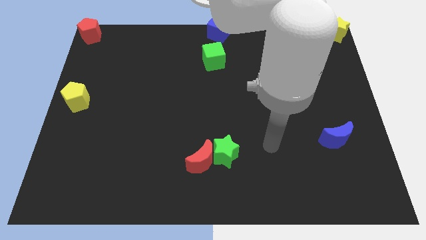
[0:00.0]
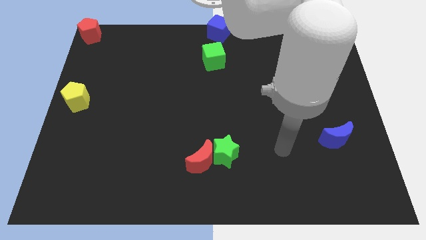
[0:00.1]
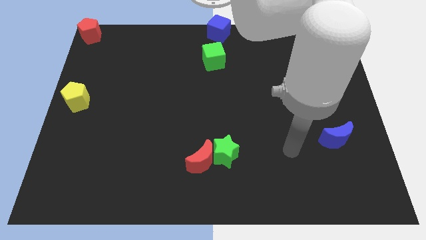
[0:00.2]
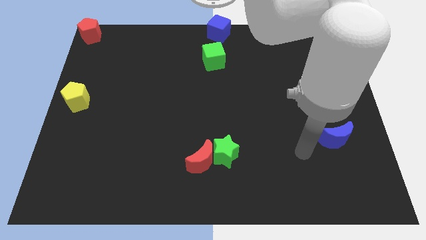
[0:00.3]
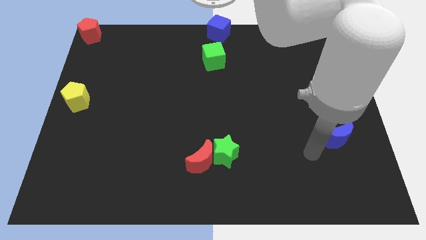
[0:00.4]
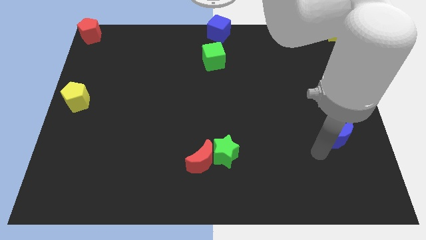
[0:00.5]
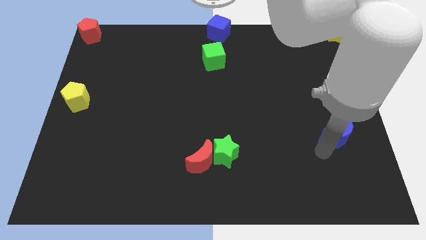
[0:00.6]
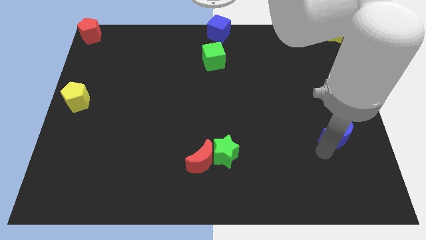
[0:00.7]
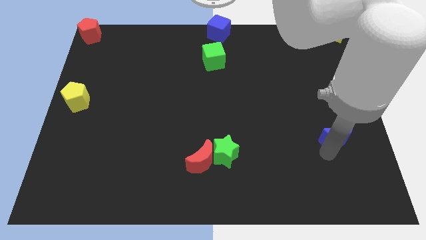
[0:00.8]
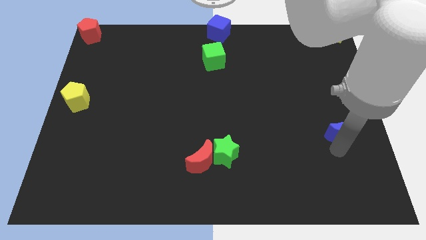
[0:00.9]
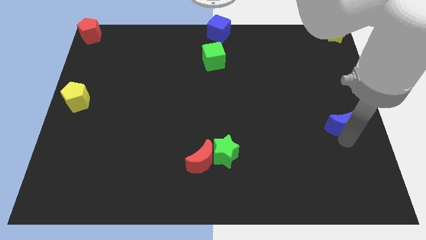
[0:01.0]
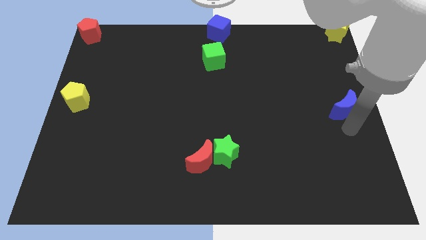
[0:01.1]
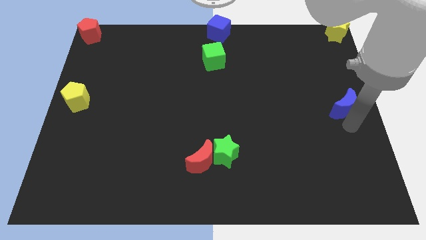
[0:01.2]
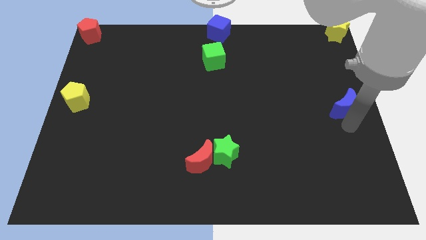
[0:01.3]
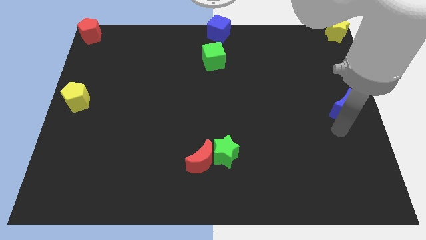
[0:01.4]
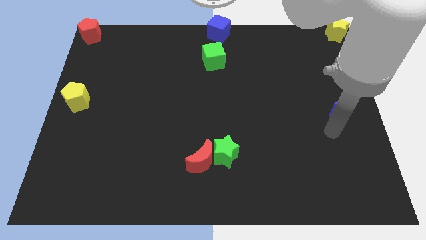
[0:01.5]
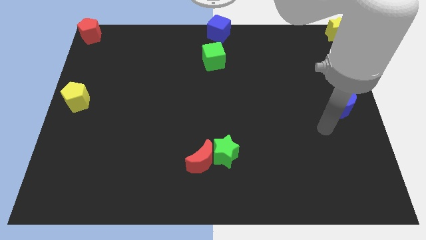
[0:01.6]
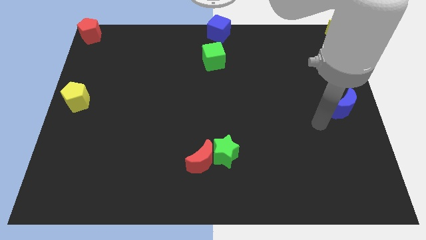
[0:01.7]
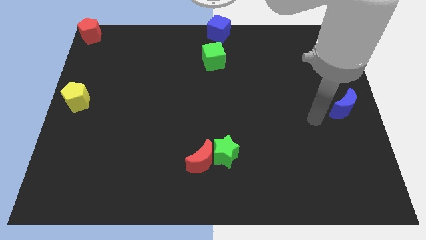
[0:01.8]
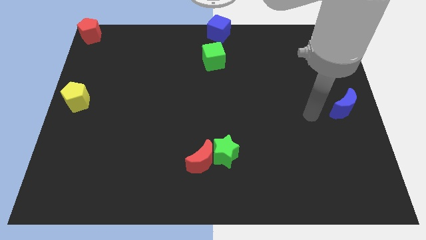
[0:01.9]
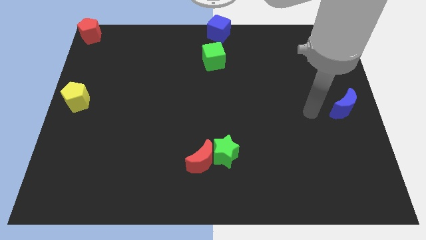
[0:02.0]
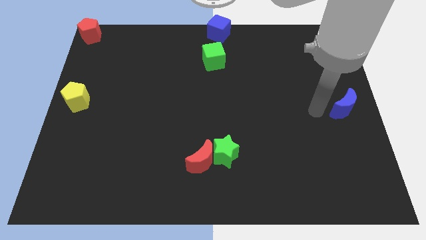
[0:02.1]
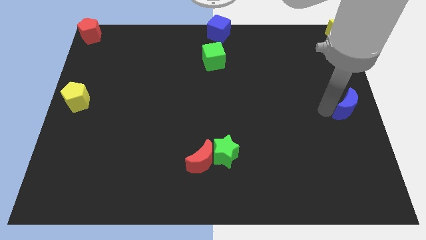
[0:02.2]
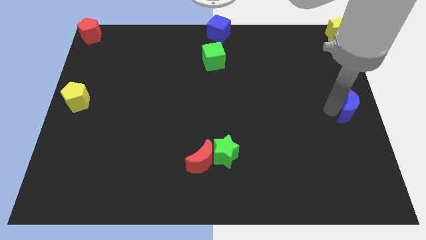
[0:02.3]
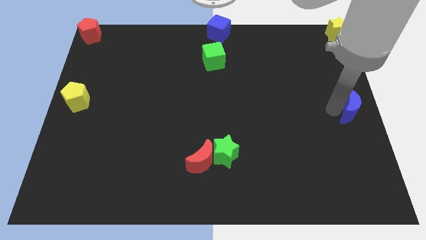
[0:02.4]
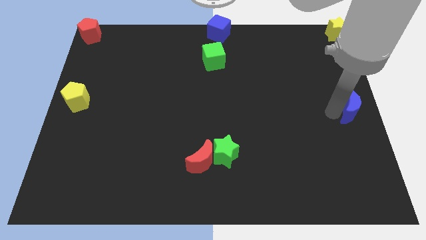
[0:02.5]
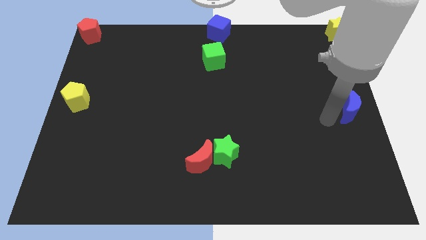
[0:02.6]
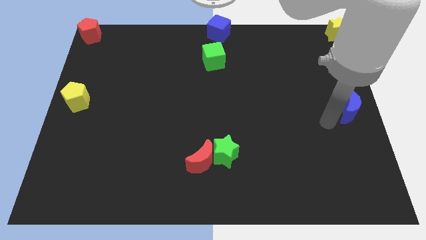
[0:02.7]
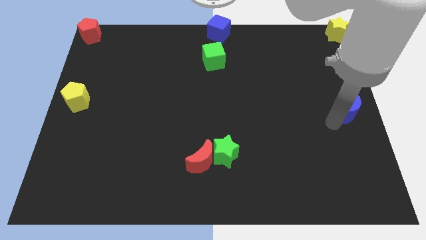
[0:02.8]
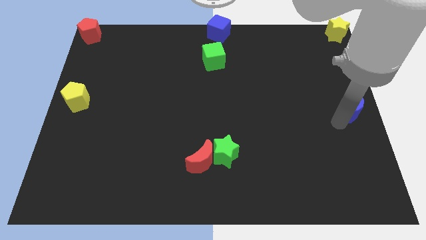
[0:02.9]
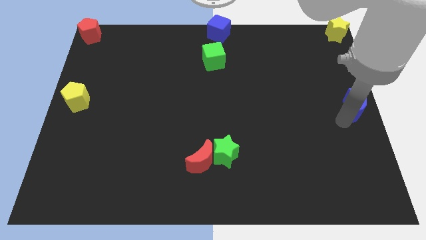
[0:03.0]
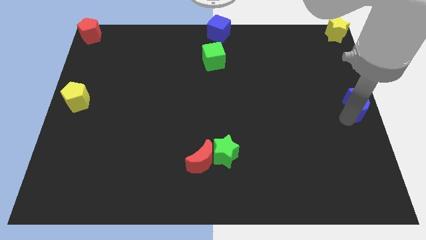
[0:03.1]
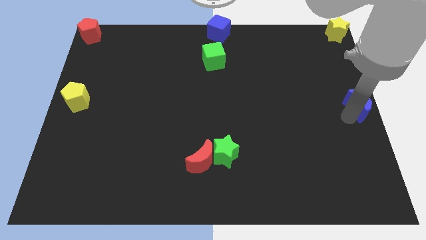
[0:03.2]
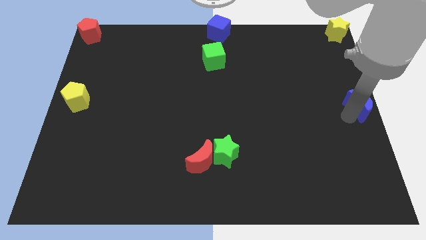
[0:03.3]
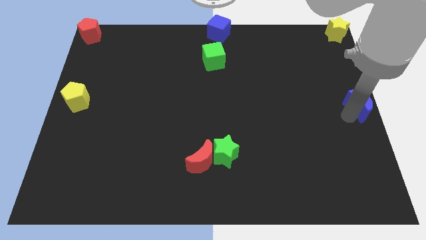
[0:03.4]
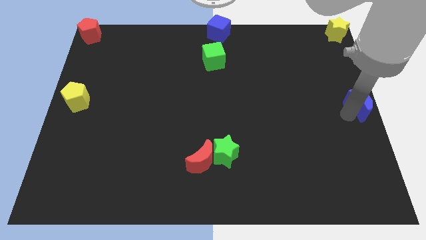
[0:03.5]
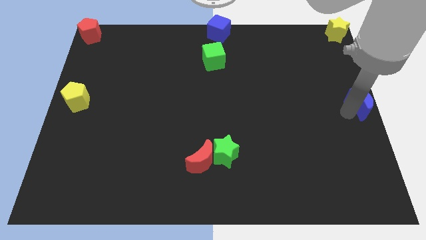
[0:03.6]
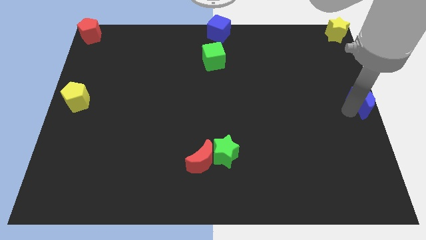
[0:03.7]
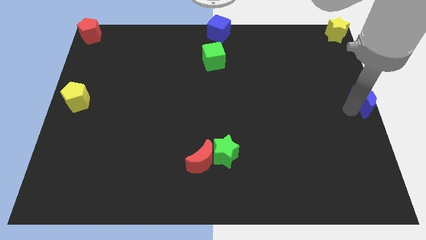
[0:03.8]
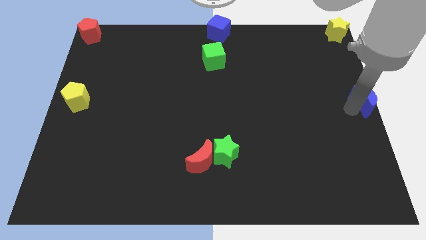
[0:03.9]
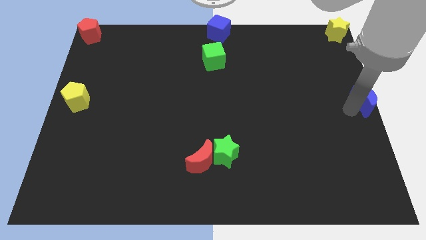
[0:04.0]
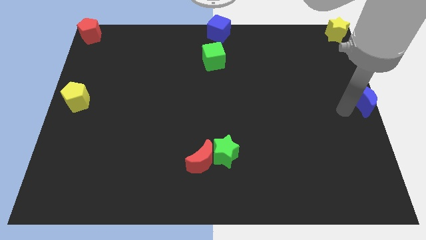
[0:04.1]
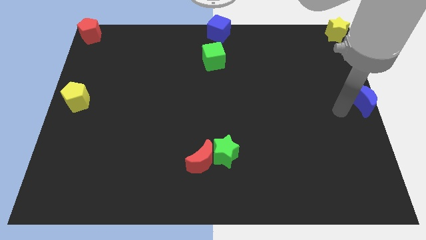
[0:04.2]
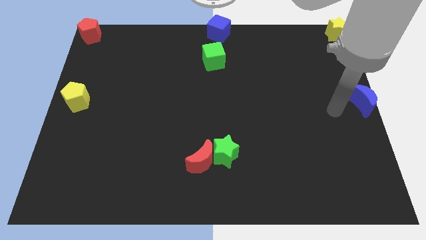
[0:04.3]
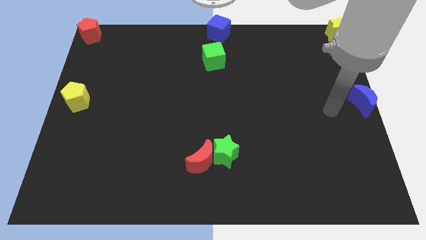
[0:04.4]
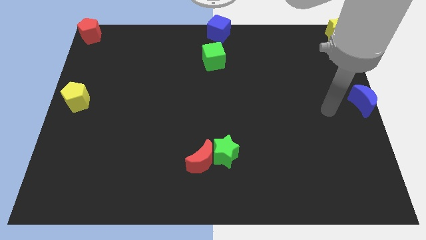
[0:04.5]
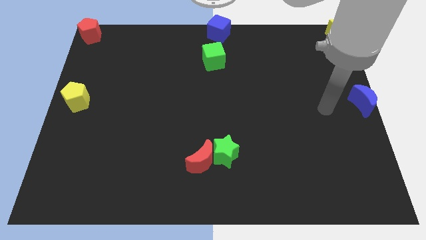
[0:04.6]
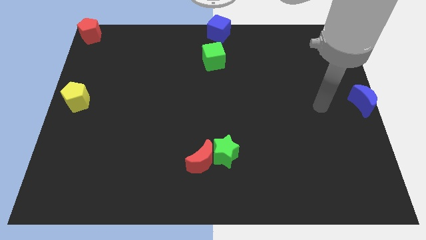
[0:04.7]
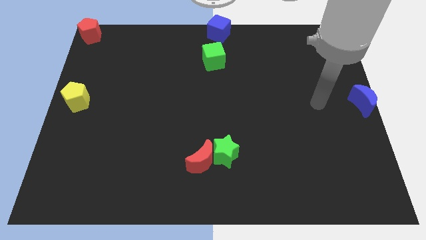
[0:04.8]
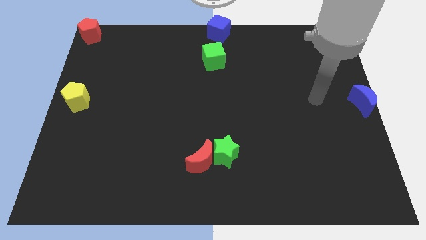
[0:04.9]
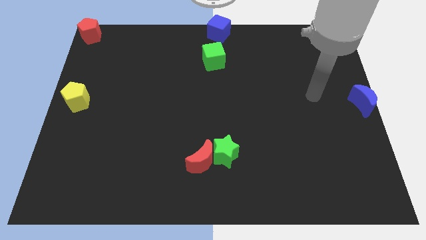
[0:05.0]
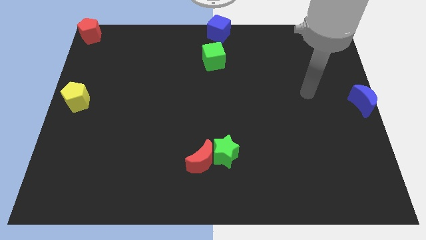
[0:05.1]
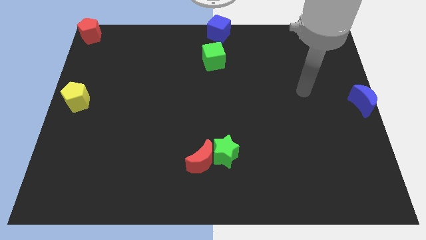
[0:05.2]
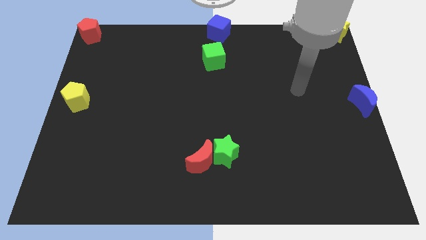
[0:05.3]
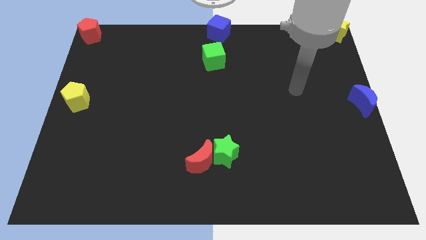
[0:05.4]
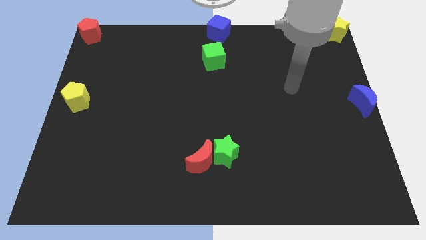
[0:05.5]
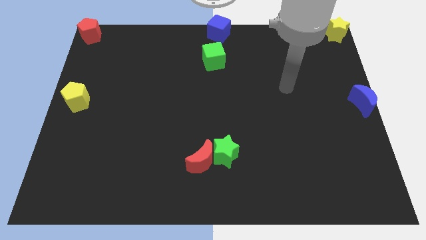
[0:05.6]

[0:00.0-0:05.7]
move the blue crescent to the right center of the board

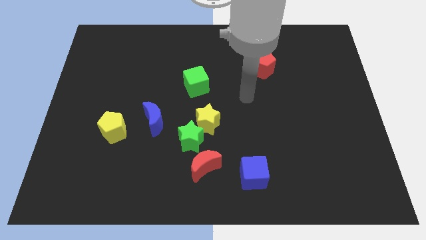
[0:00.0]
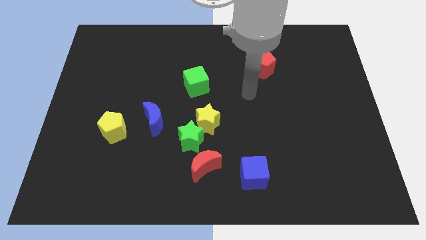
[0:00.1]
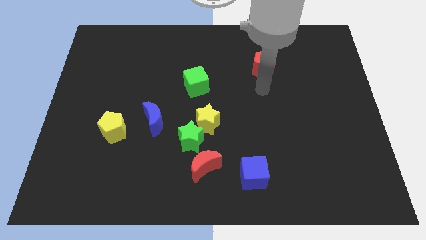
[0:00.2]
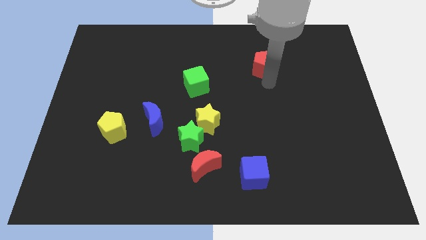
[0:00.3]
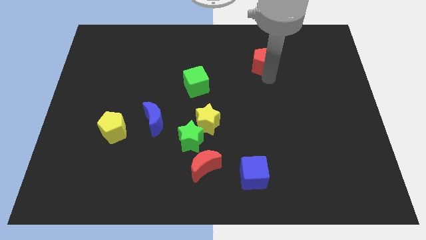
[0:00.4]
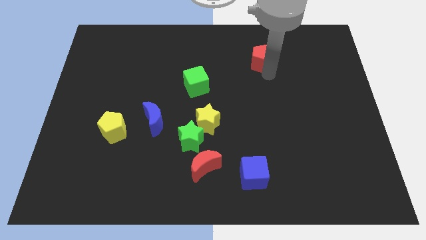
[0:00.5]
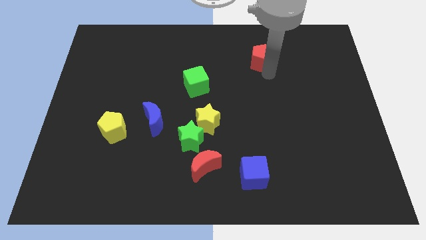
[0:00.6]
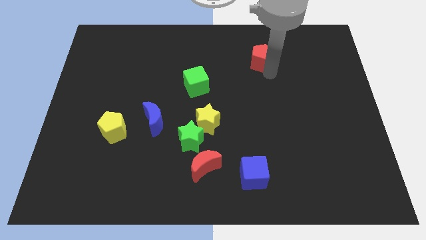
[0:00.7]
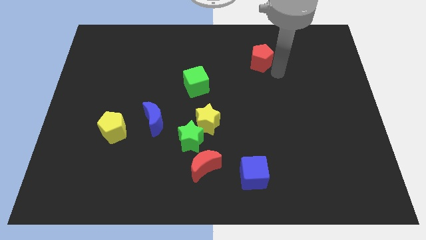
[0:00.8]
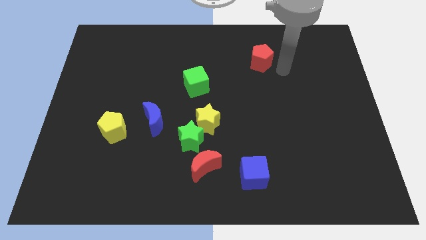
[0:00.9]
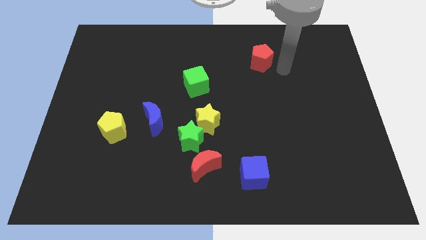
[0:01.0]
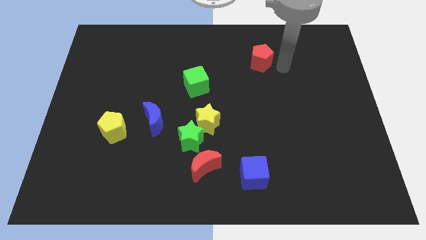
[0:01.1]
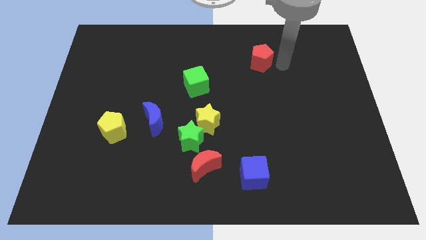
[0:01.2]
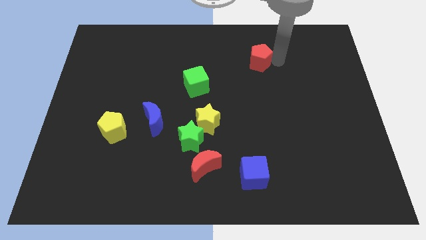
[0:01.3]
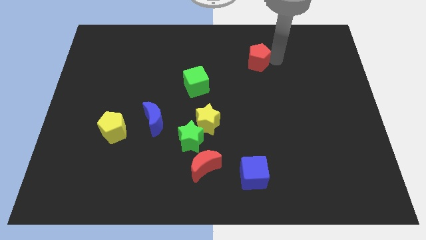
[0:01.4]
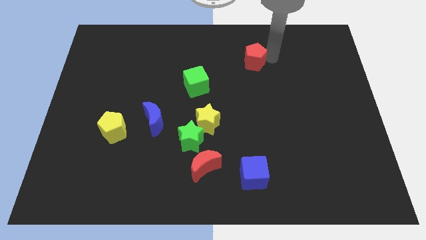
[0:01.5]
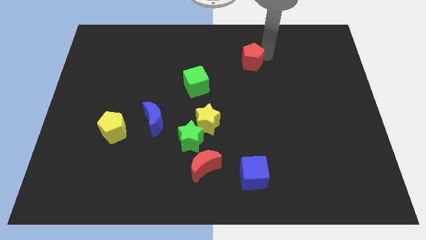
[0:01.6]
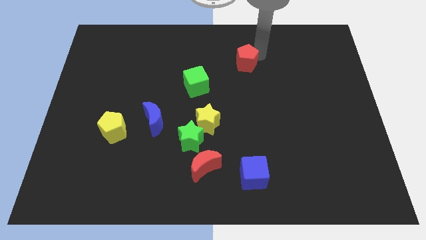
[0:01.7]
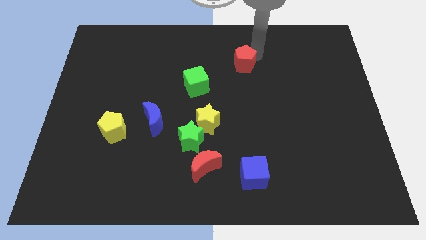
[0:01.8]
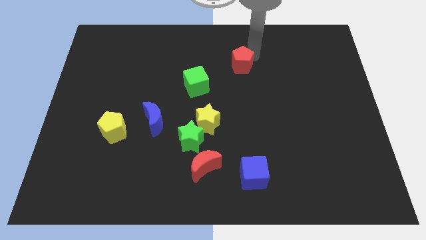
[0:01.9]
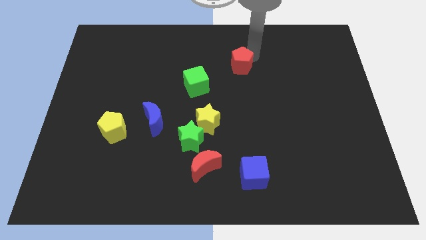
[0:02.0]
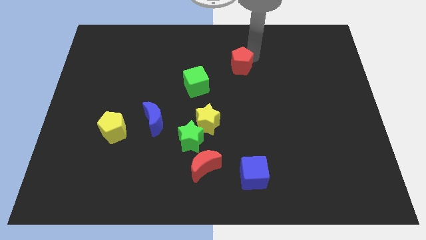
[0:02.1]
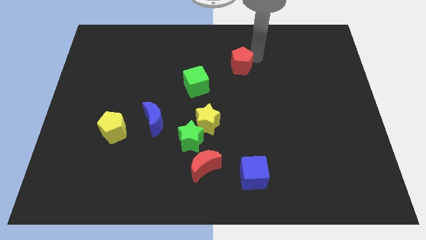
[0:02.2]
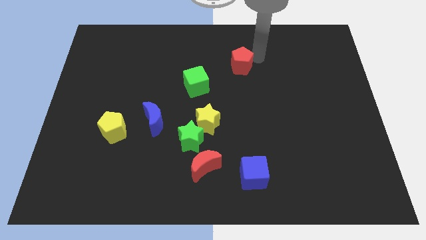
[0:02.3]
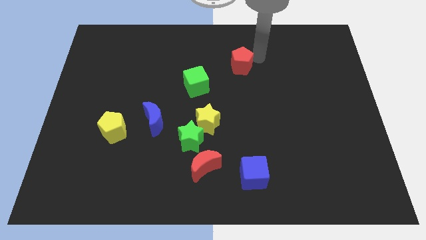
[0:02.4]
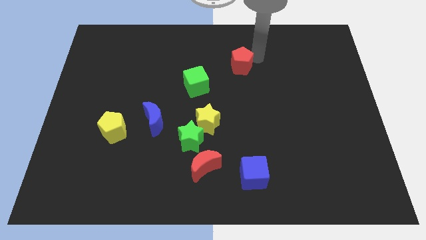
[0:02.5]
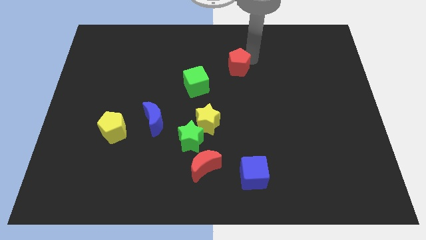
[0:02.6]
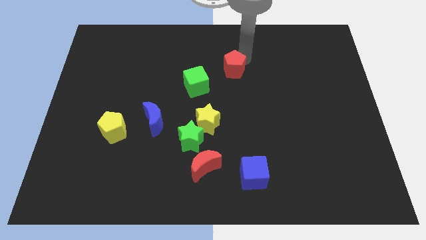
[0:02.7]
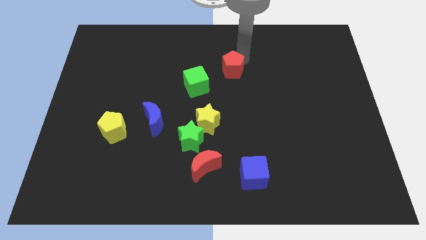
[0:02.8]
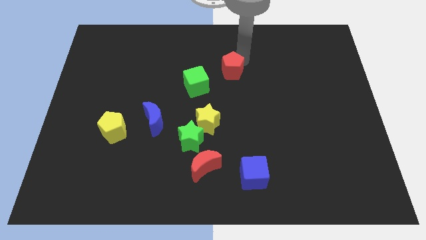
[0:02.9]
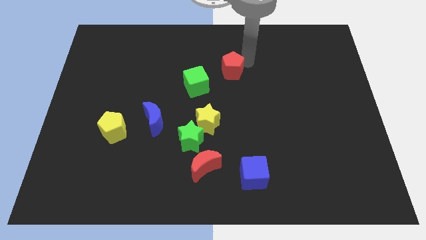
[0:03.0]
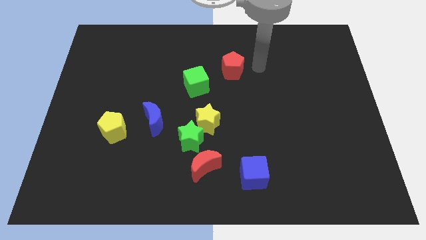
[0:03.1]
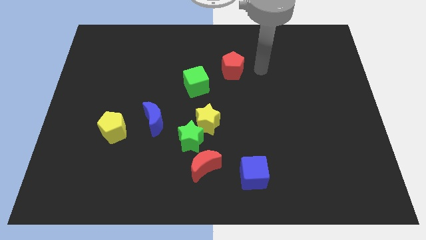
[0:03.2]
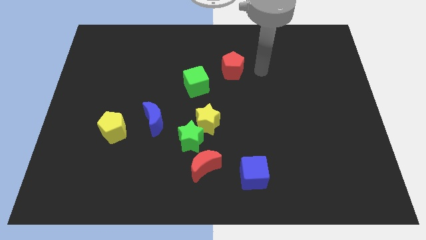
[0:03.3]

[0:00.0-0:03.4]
move the red pentagon to the left
